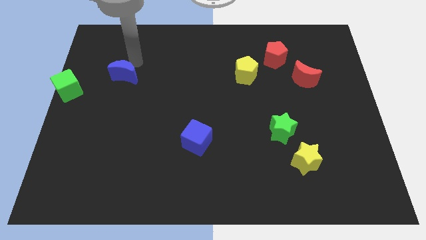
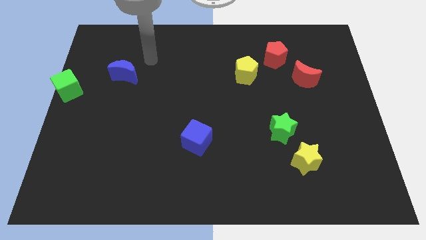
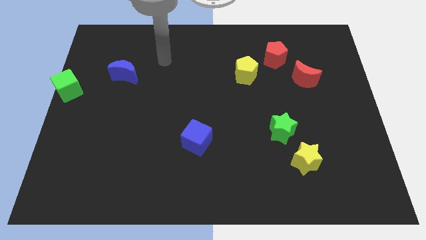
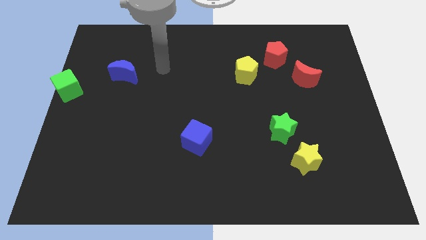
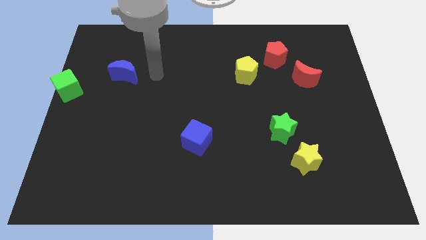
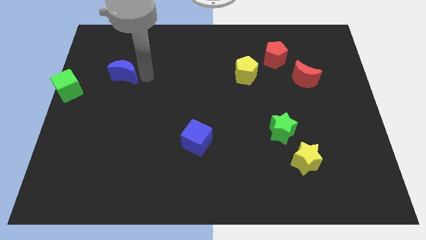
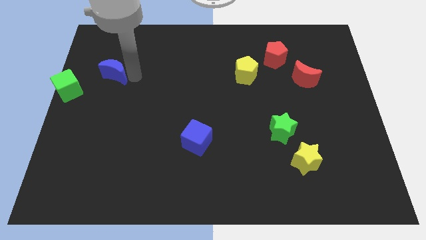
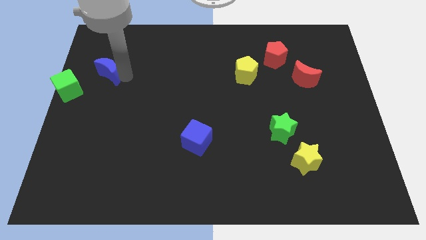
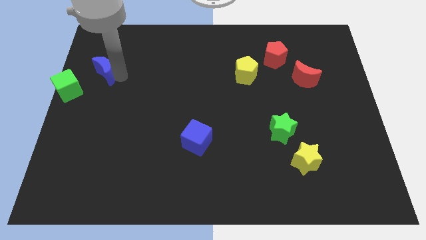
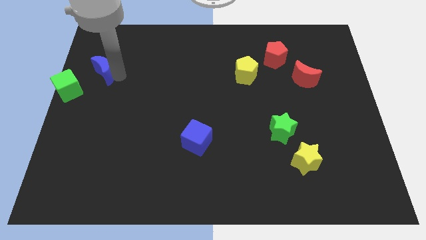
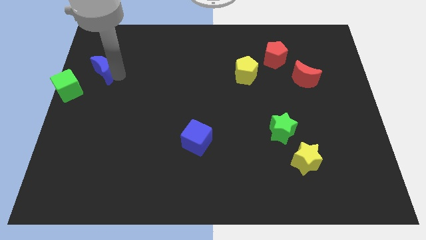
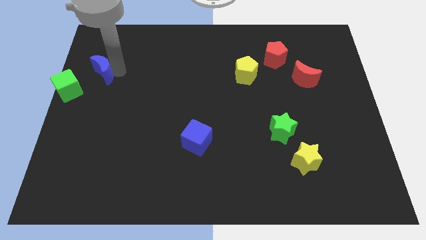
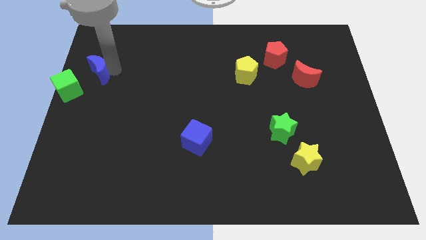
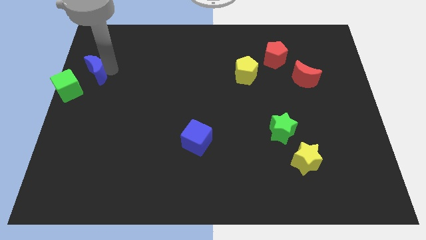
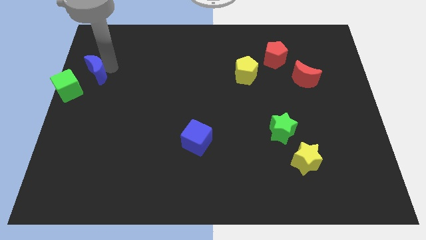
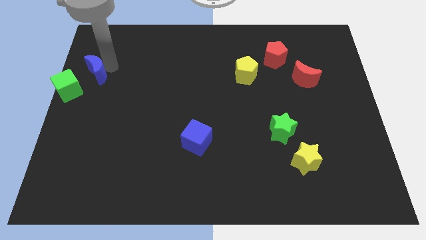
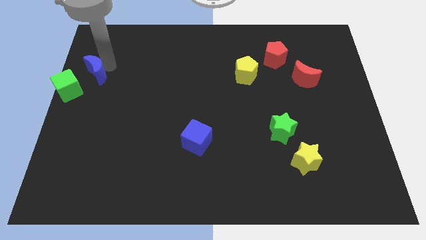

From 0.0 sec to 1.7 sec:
slide the blue crescent slightly to the left

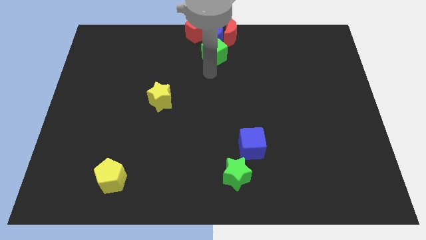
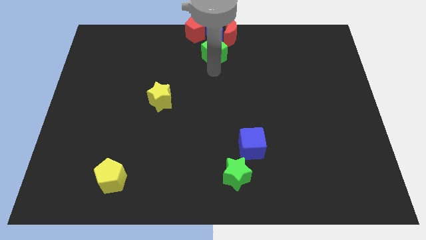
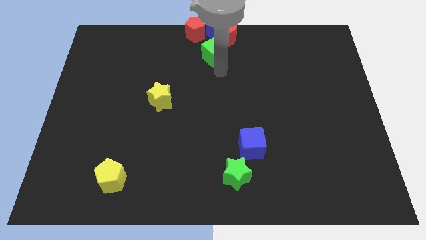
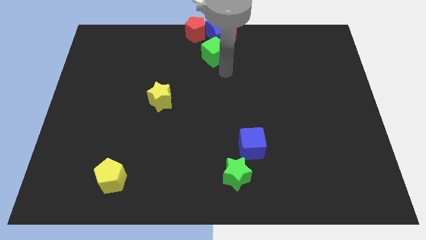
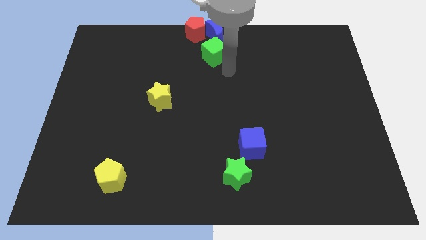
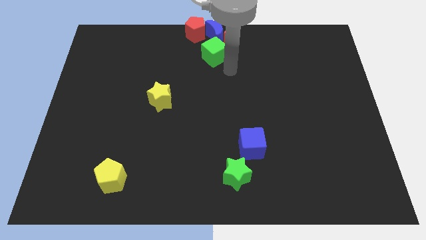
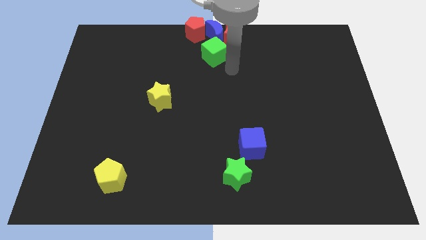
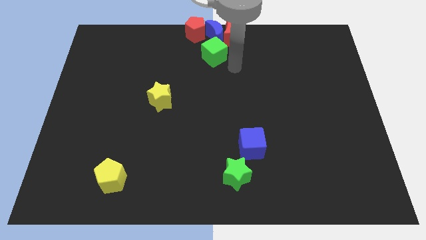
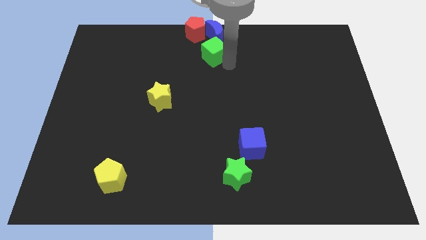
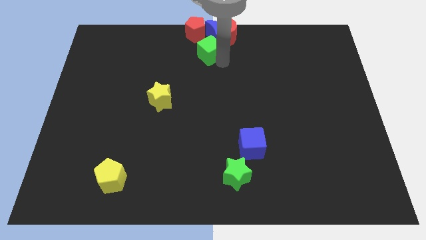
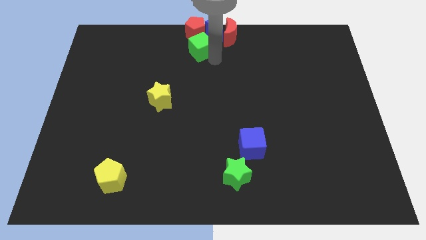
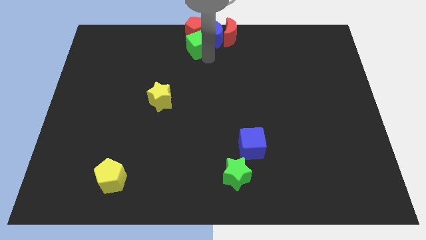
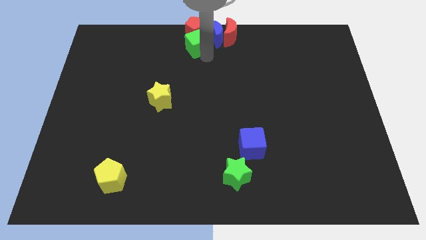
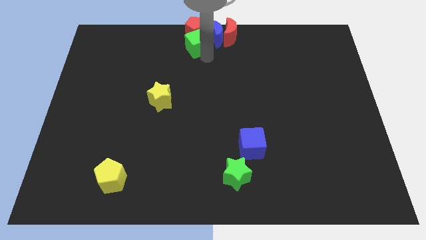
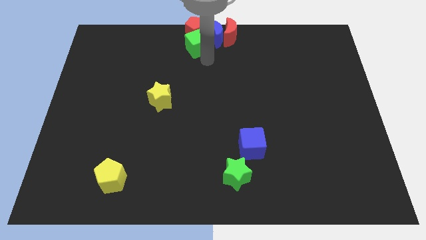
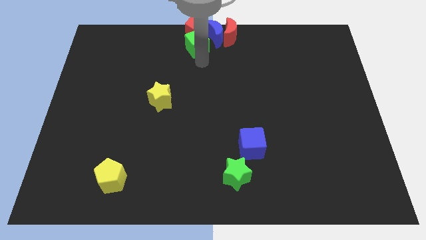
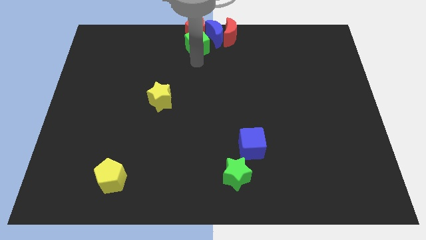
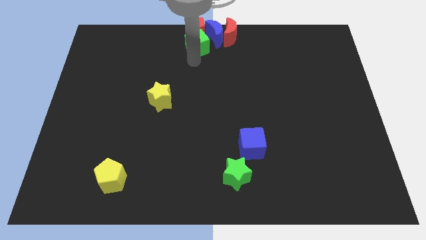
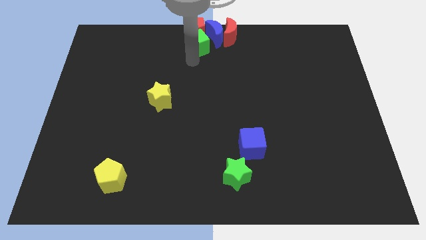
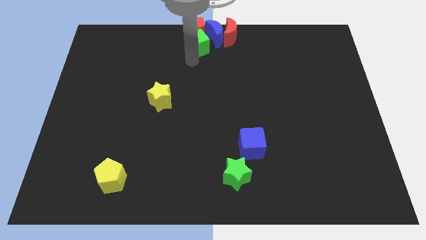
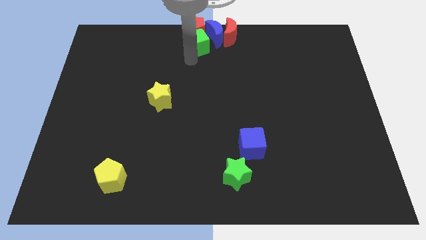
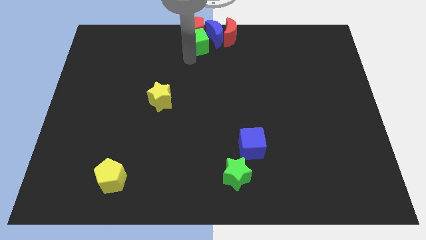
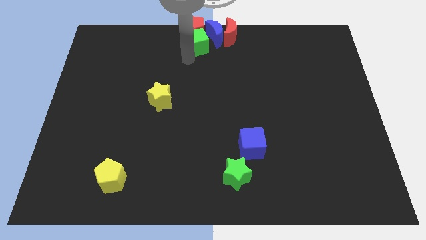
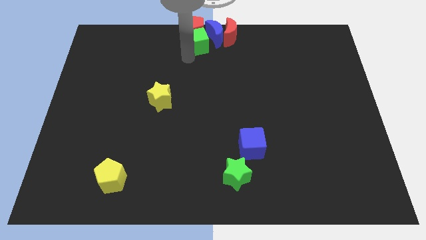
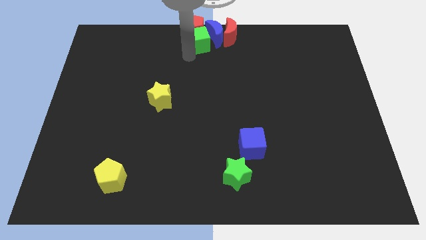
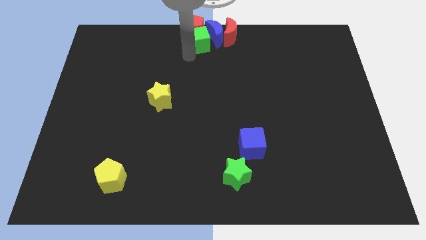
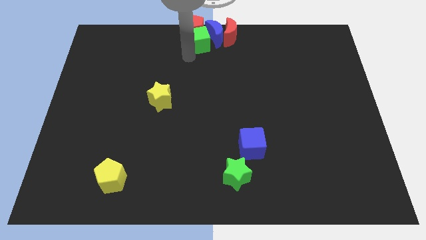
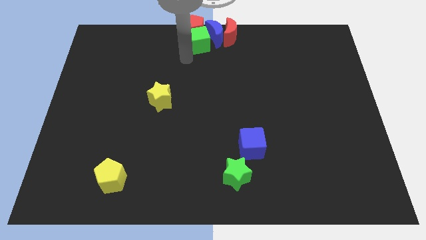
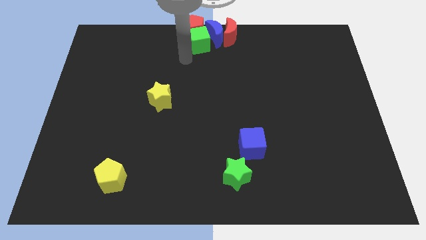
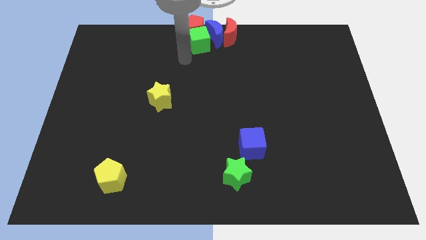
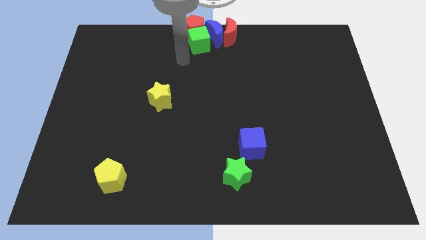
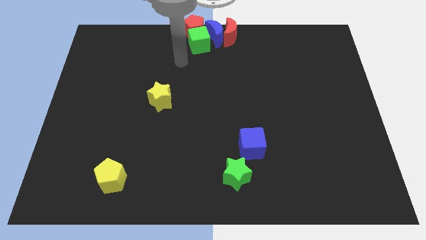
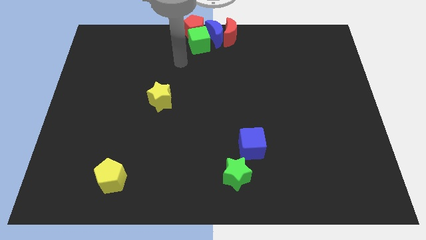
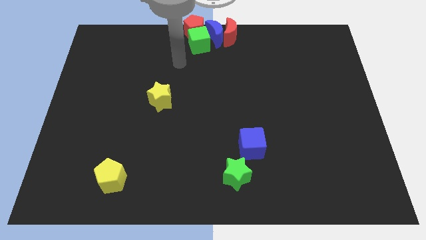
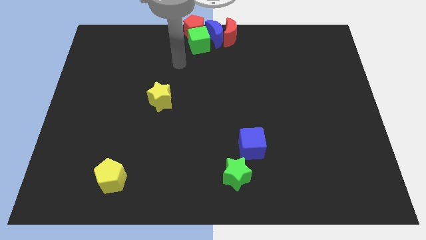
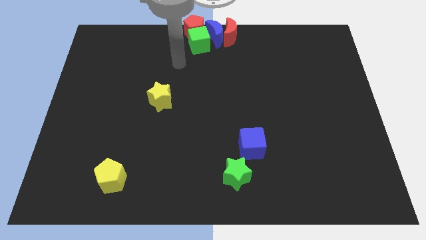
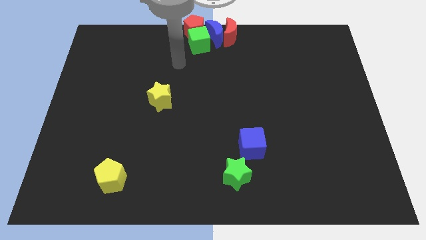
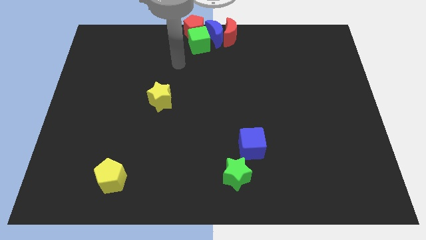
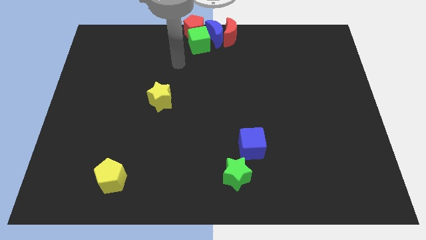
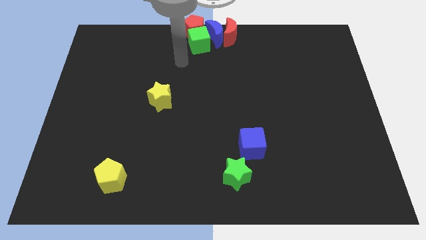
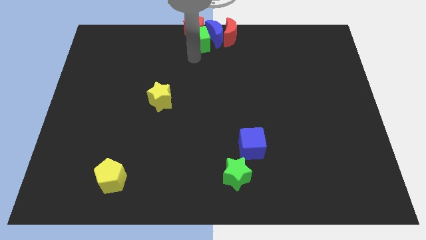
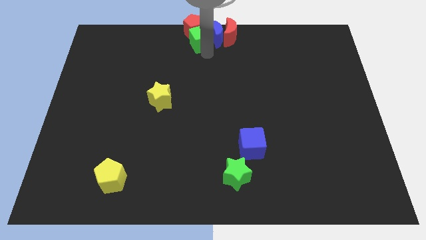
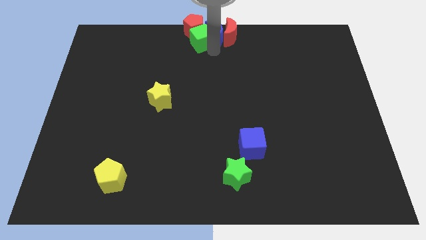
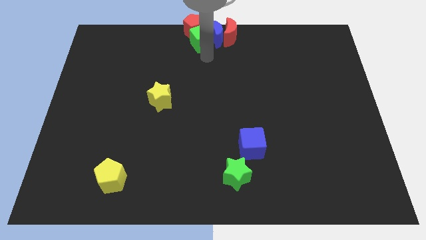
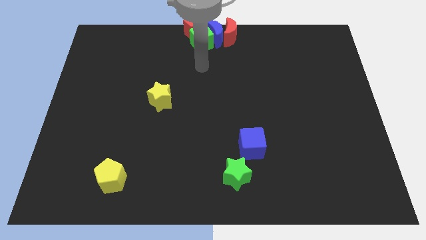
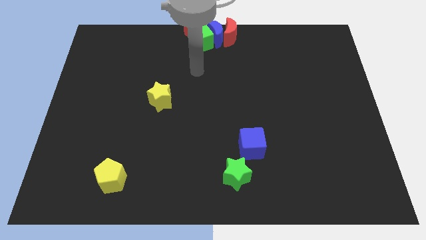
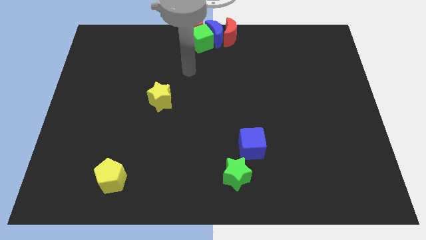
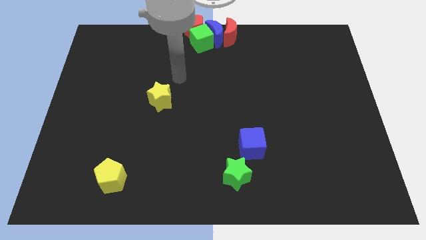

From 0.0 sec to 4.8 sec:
push the green cube into the red pentagon

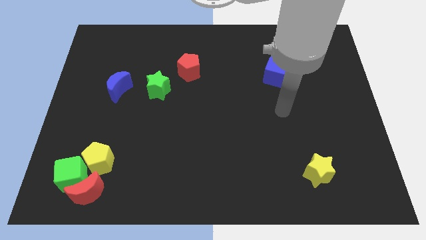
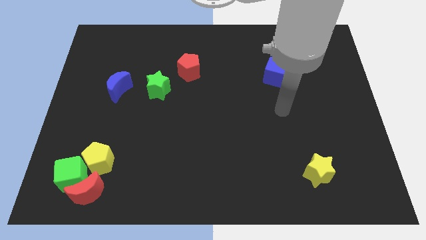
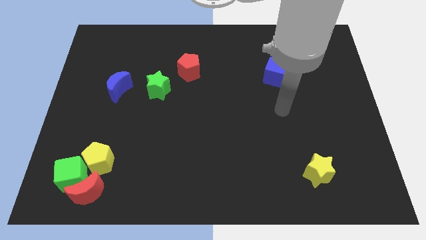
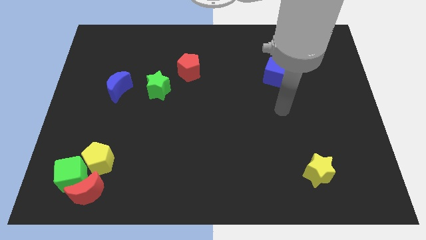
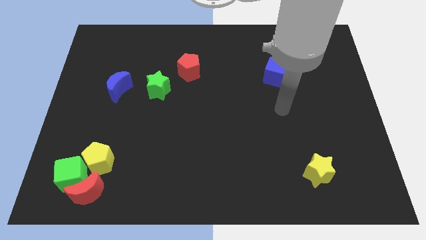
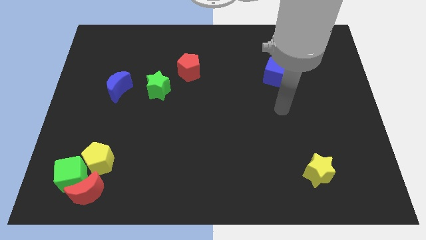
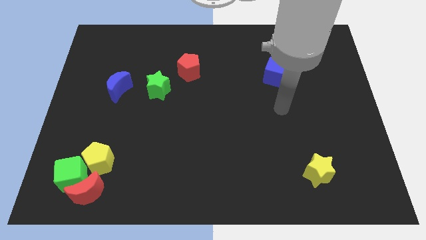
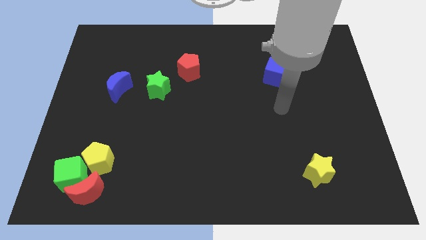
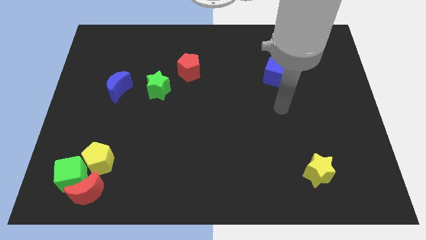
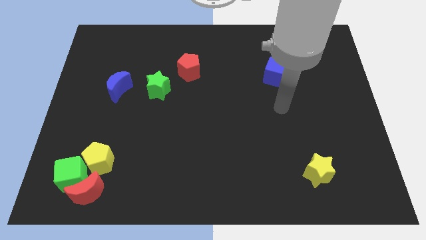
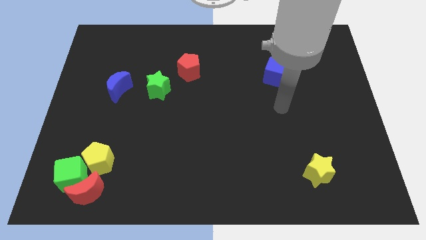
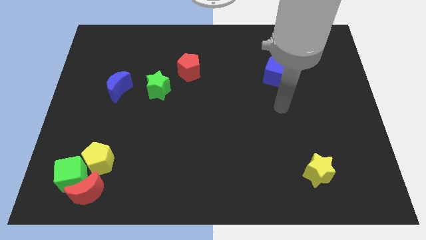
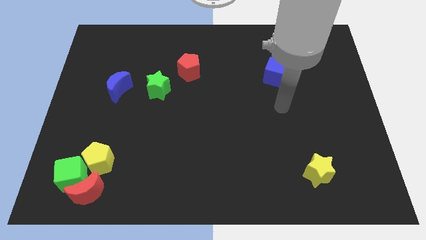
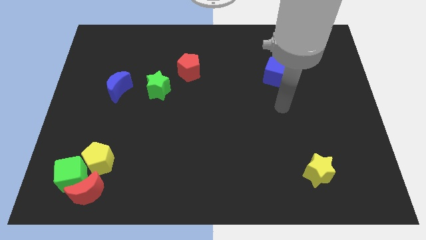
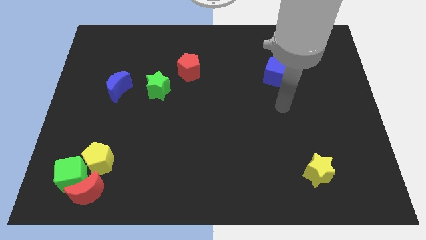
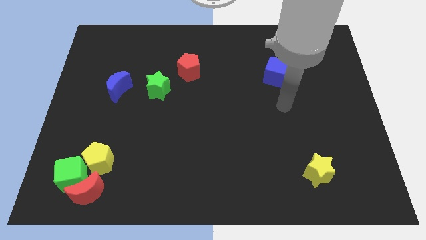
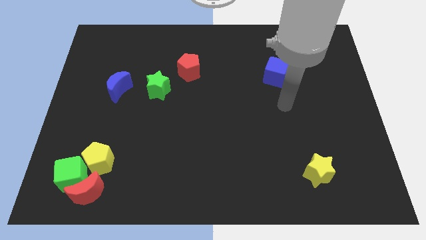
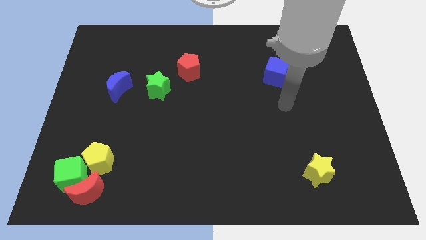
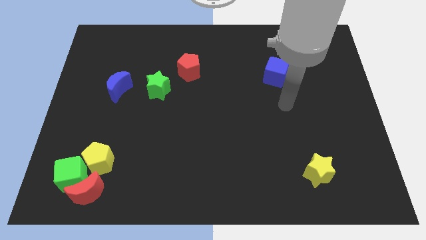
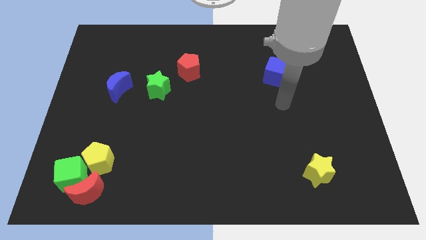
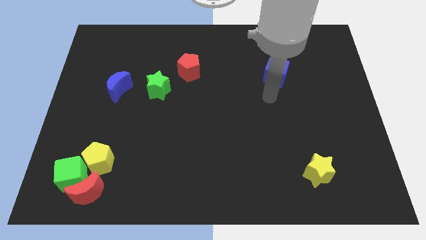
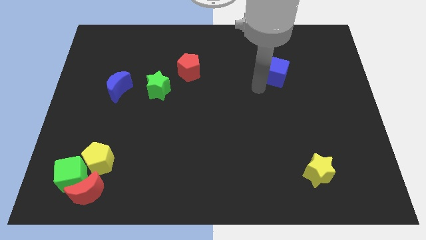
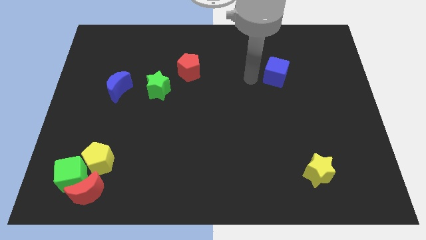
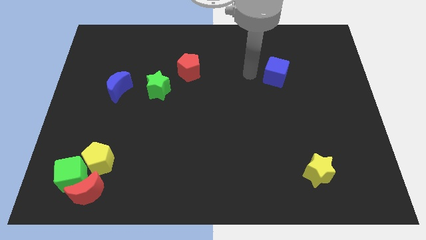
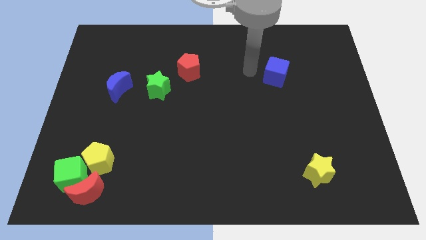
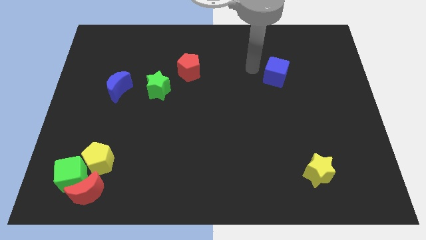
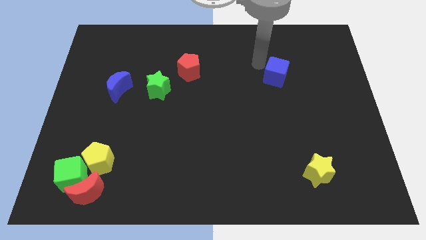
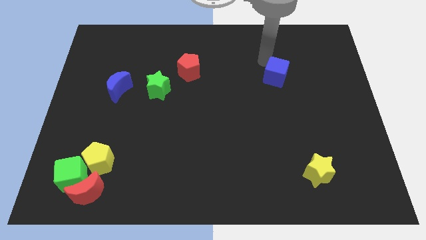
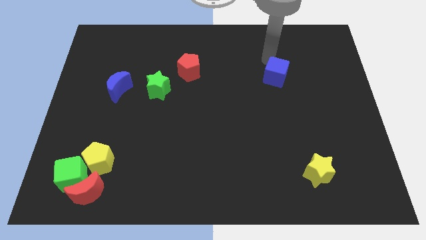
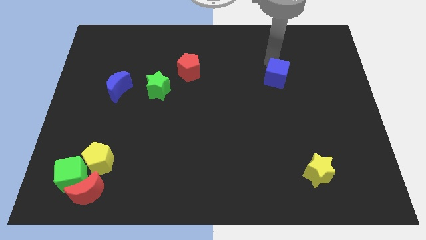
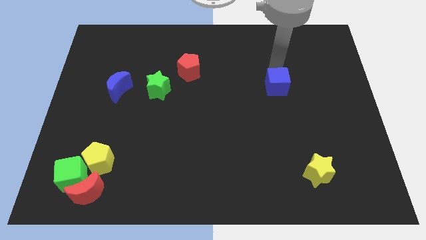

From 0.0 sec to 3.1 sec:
place arm on the top of blue cube
